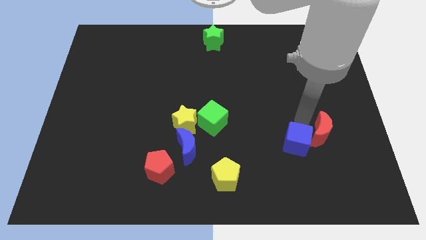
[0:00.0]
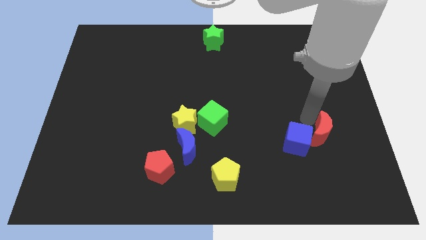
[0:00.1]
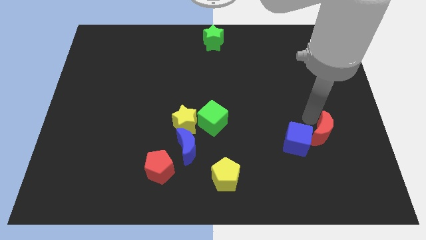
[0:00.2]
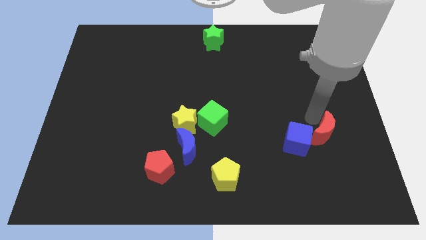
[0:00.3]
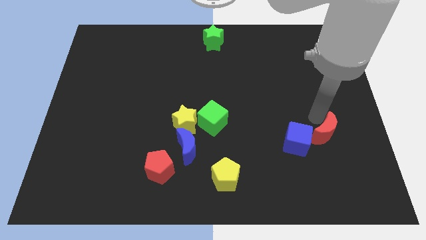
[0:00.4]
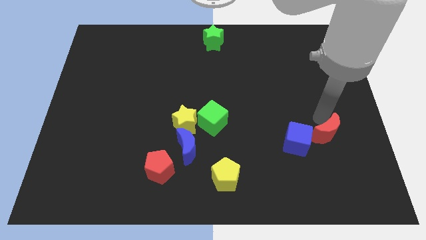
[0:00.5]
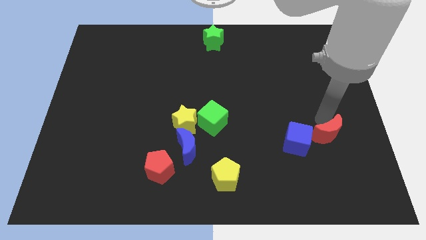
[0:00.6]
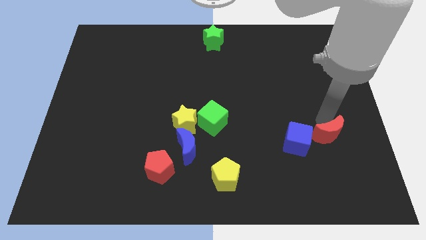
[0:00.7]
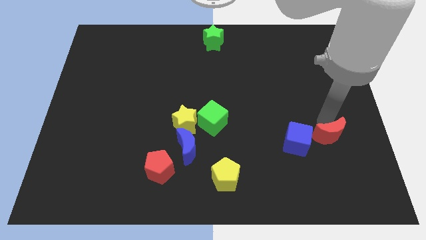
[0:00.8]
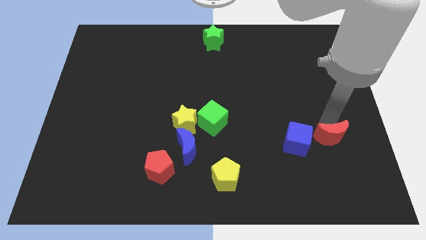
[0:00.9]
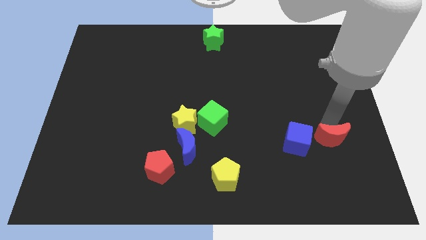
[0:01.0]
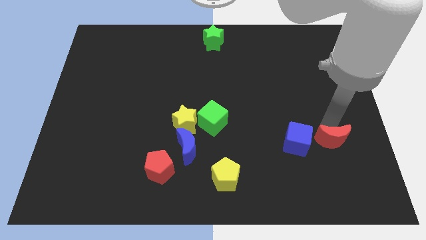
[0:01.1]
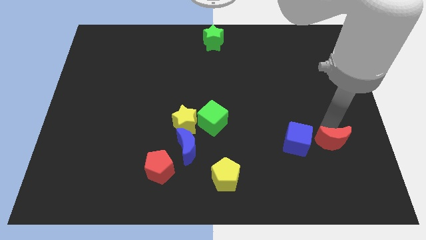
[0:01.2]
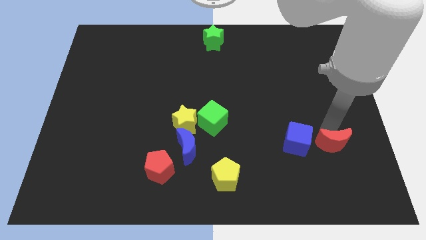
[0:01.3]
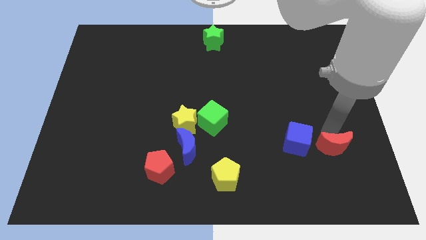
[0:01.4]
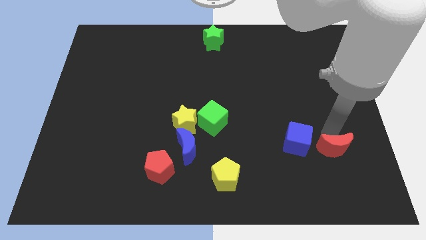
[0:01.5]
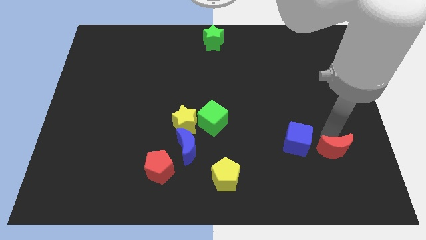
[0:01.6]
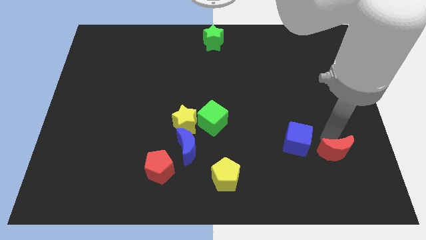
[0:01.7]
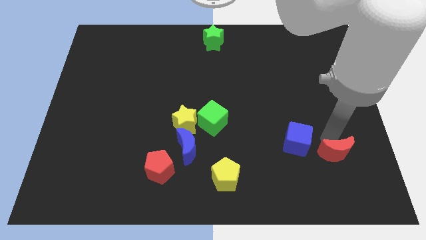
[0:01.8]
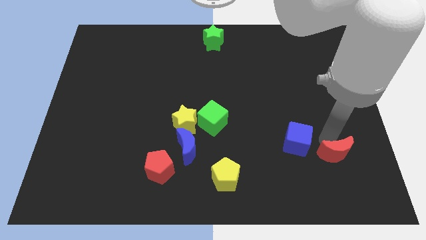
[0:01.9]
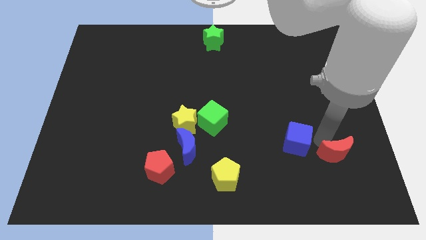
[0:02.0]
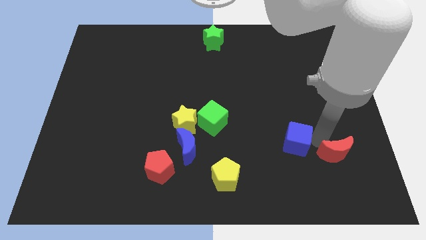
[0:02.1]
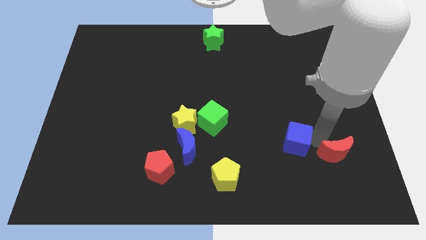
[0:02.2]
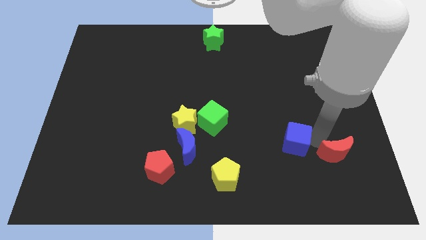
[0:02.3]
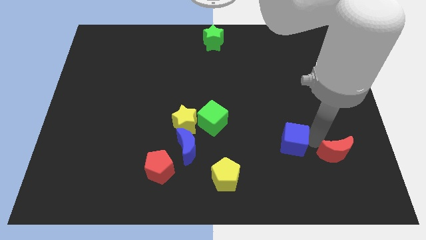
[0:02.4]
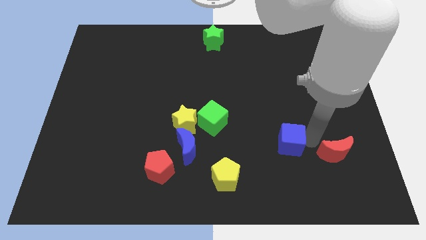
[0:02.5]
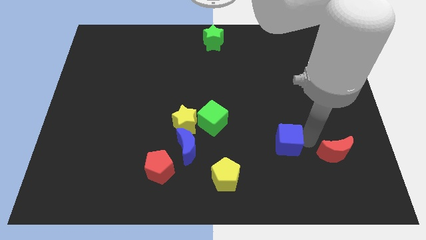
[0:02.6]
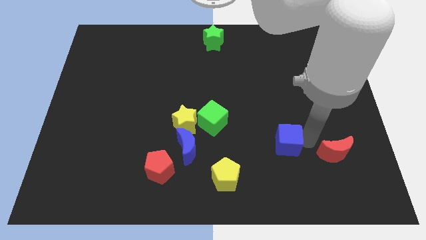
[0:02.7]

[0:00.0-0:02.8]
separate blue cube and red moon

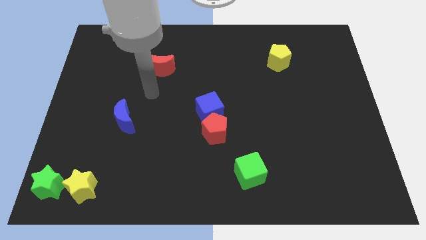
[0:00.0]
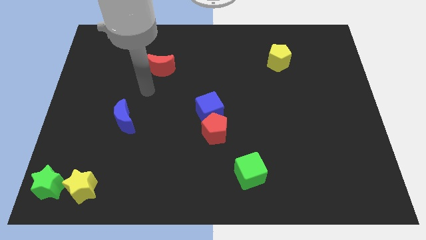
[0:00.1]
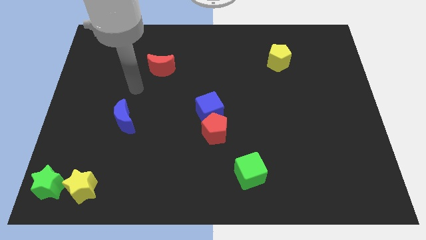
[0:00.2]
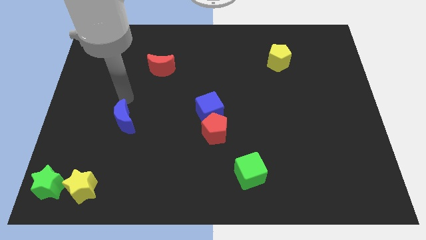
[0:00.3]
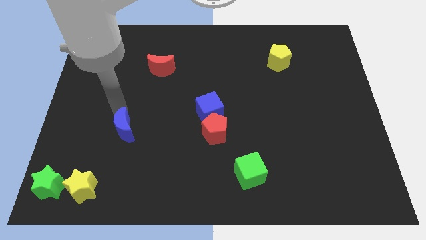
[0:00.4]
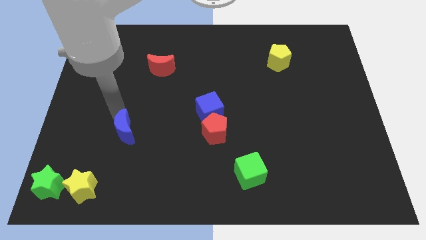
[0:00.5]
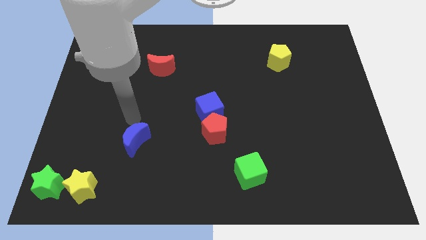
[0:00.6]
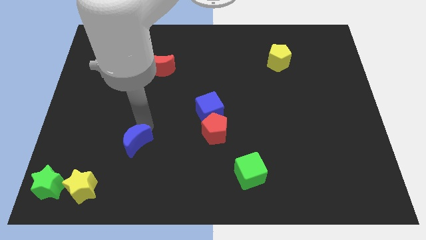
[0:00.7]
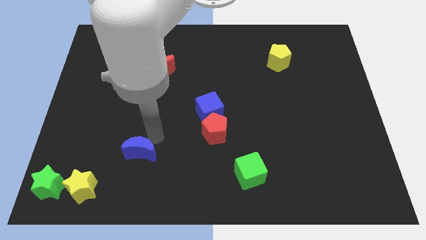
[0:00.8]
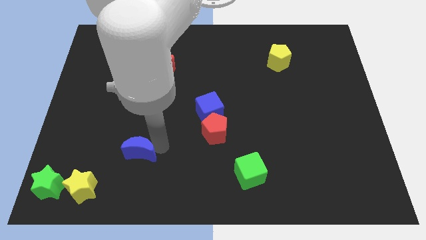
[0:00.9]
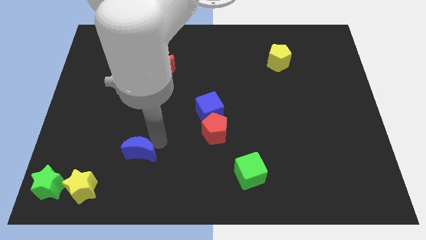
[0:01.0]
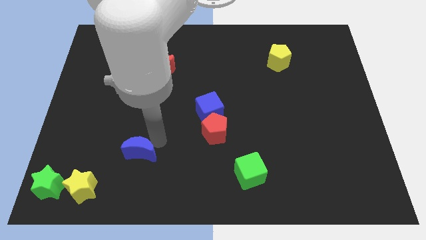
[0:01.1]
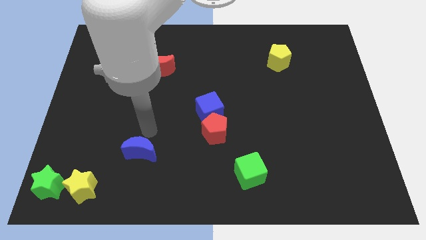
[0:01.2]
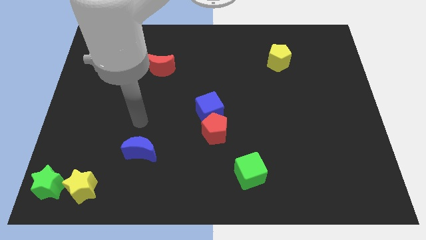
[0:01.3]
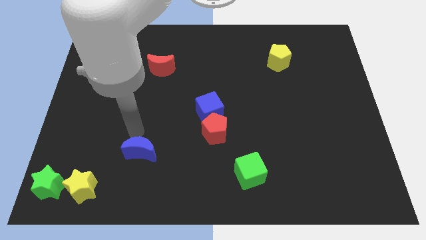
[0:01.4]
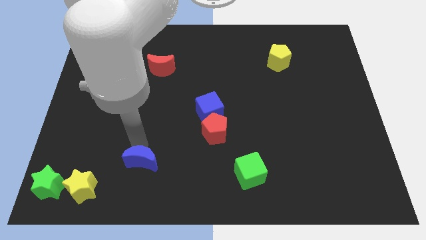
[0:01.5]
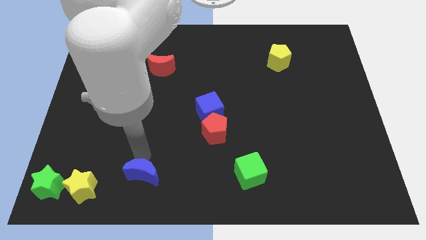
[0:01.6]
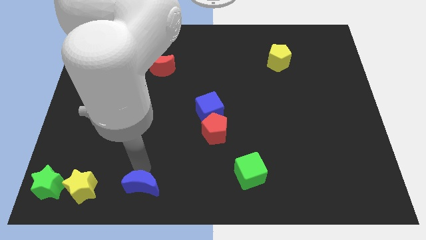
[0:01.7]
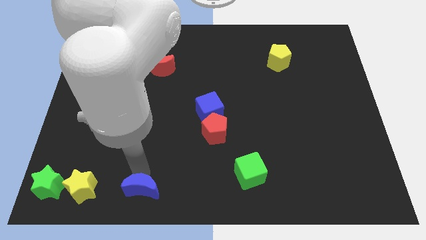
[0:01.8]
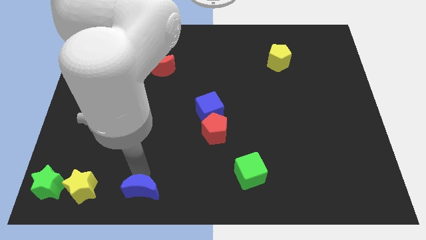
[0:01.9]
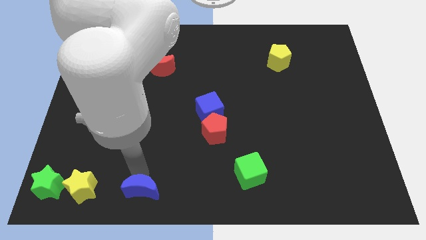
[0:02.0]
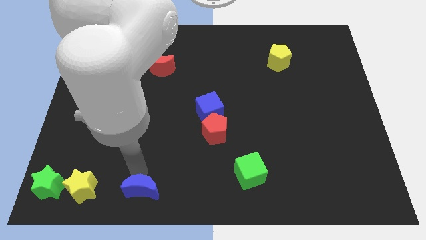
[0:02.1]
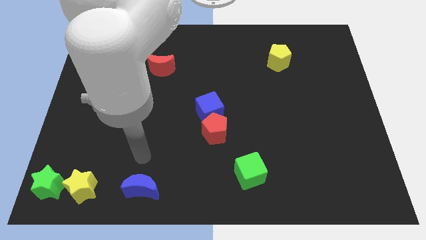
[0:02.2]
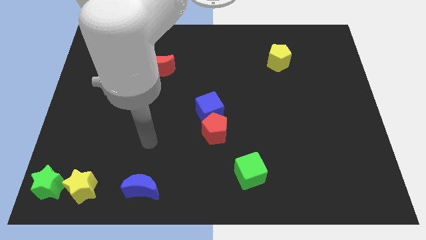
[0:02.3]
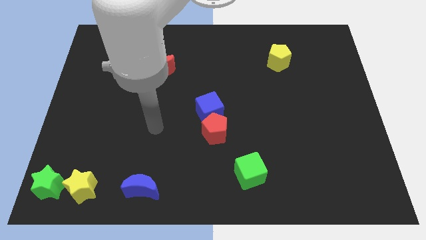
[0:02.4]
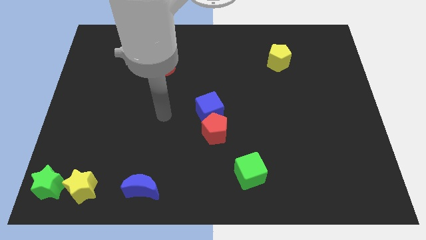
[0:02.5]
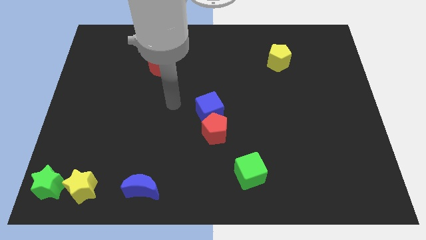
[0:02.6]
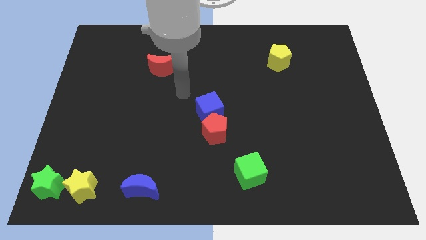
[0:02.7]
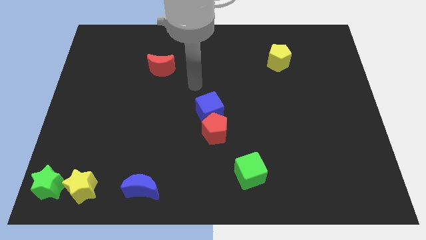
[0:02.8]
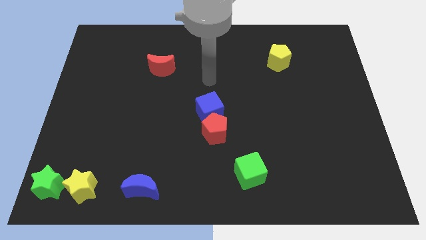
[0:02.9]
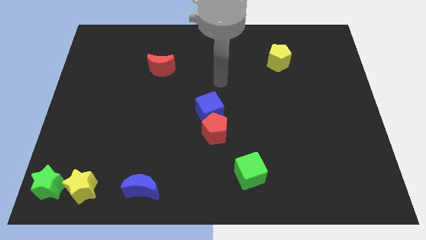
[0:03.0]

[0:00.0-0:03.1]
move the blue moon parallel right to the yellow star

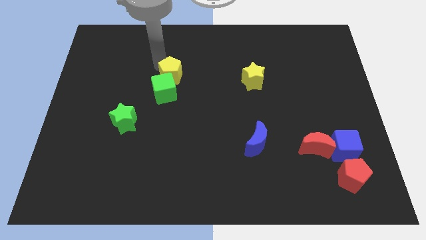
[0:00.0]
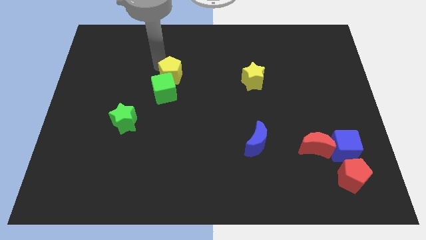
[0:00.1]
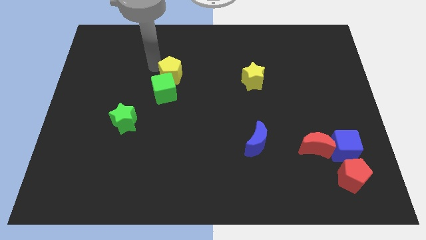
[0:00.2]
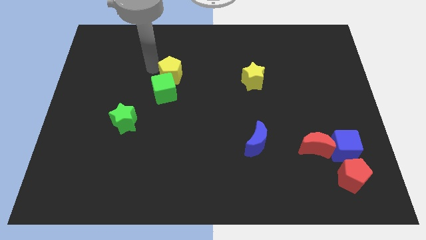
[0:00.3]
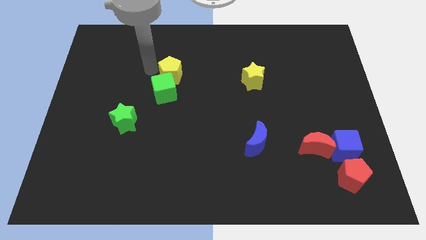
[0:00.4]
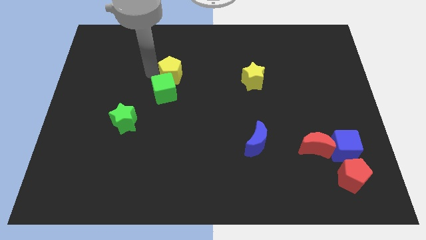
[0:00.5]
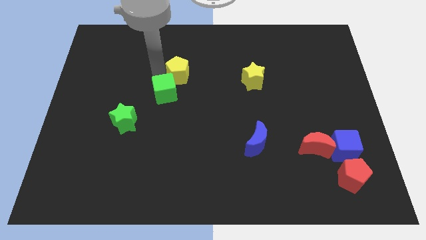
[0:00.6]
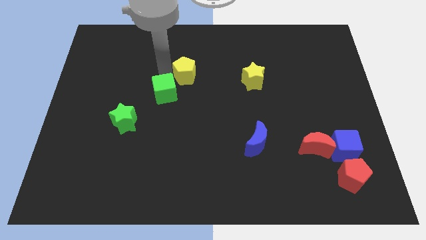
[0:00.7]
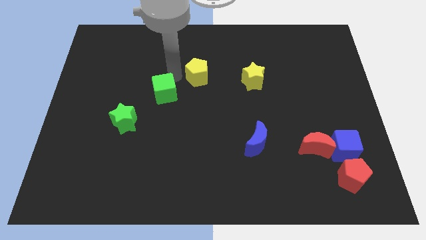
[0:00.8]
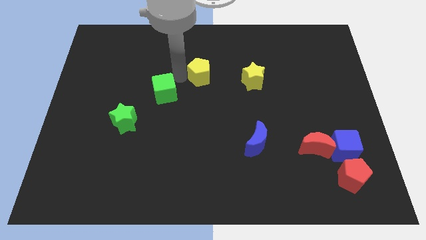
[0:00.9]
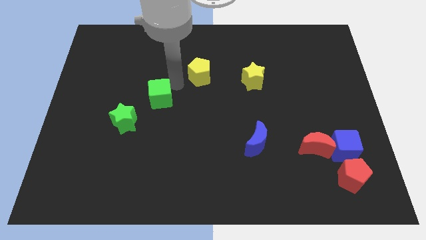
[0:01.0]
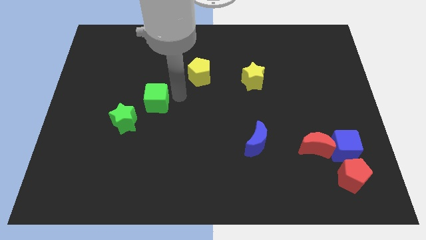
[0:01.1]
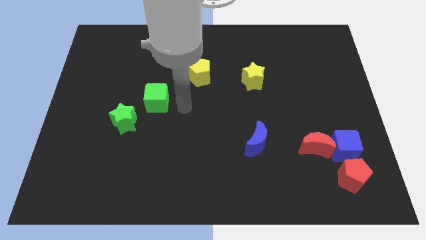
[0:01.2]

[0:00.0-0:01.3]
place the yellow pentagon left to the yellow star

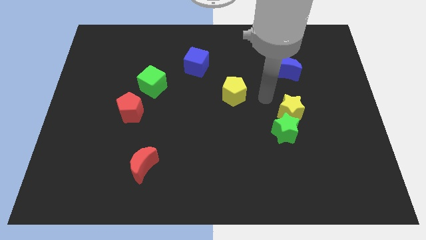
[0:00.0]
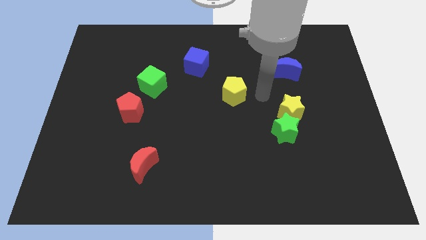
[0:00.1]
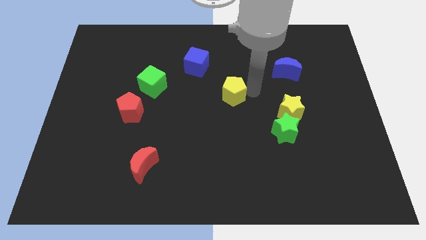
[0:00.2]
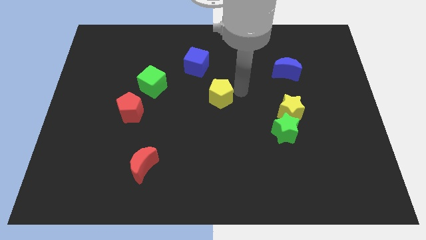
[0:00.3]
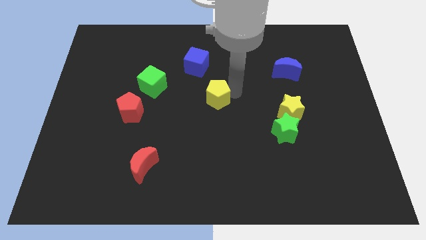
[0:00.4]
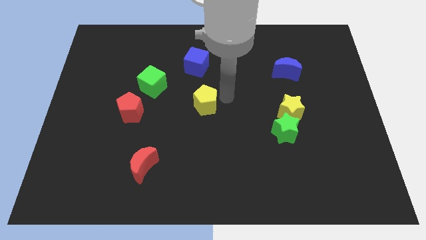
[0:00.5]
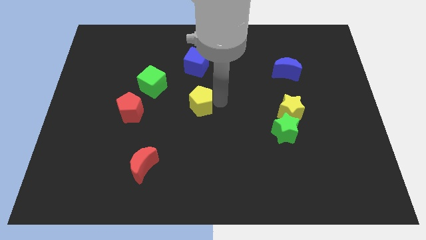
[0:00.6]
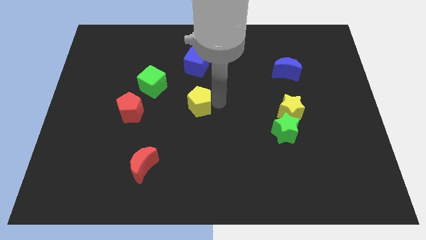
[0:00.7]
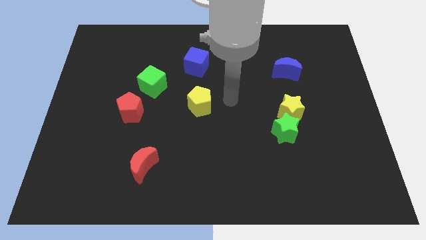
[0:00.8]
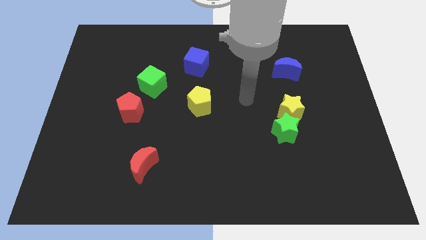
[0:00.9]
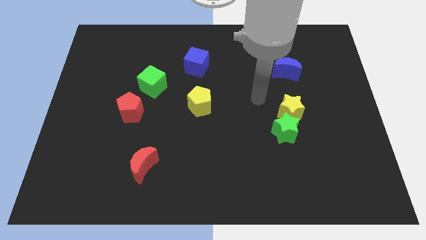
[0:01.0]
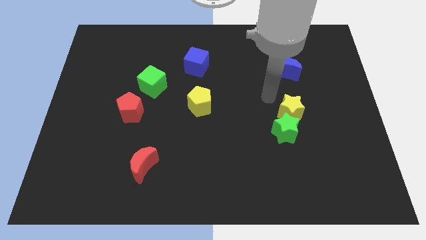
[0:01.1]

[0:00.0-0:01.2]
move the yellow pentagon to the center of the board

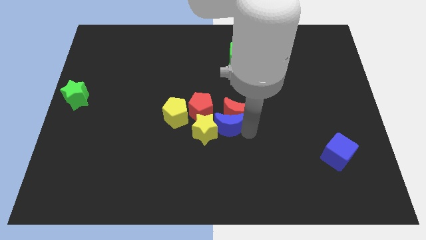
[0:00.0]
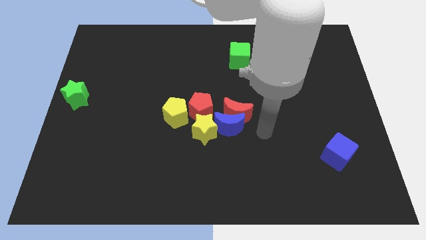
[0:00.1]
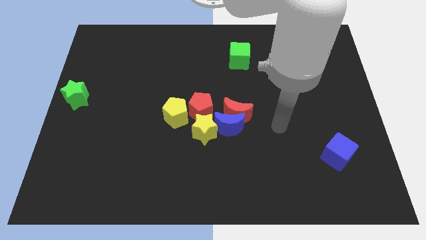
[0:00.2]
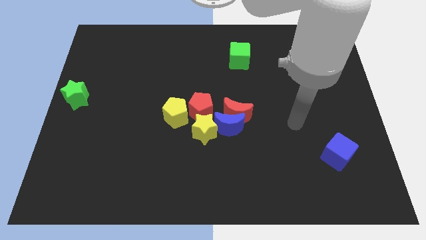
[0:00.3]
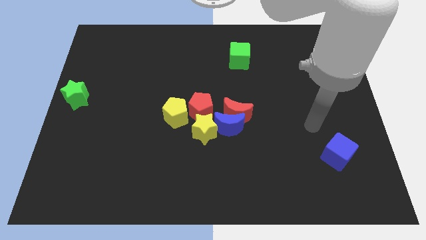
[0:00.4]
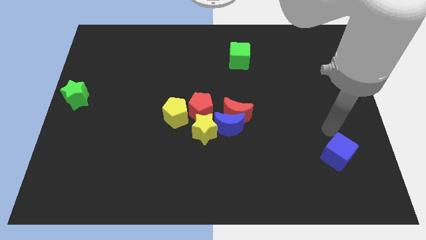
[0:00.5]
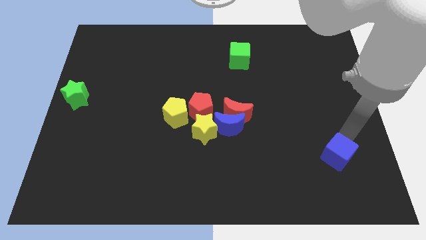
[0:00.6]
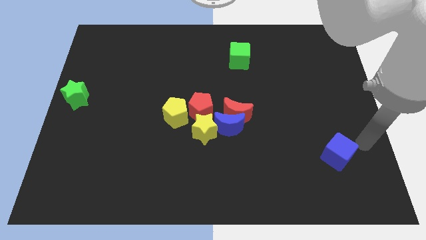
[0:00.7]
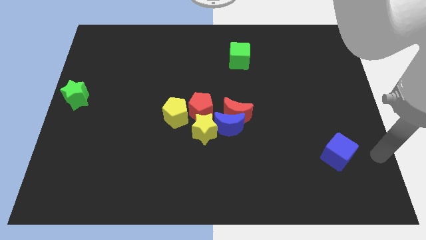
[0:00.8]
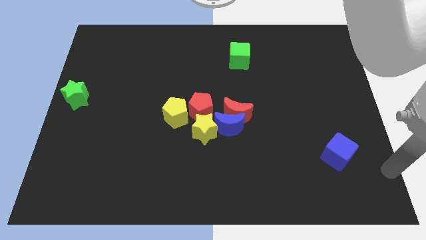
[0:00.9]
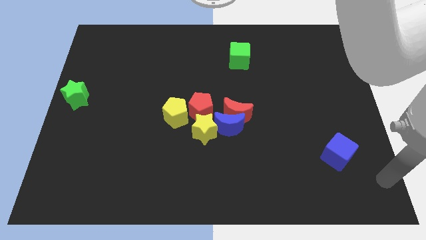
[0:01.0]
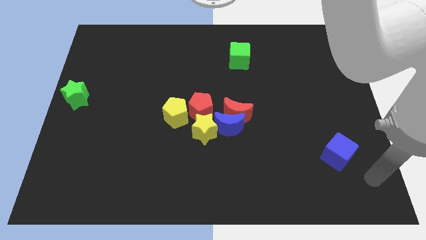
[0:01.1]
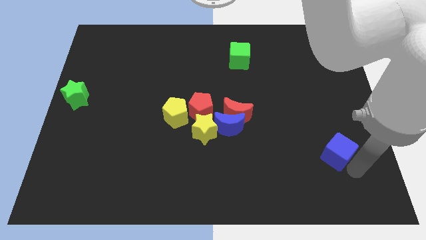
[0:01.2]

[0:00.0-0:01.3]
move your arm to the right side of the blue cube
